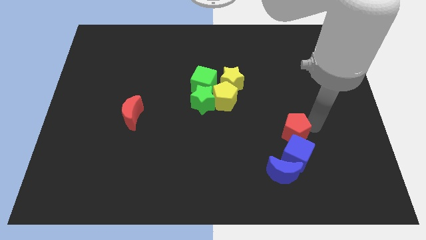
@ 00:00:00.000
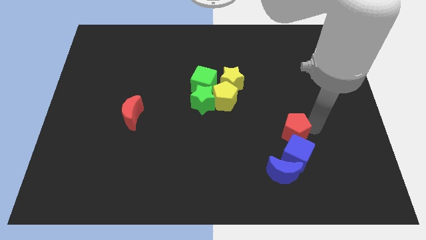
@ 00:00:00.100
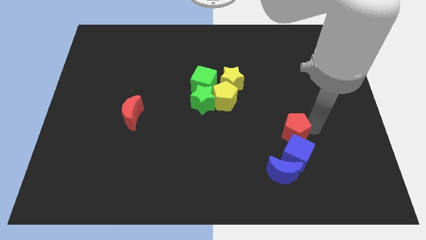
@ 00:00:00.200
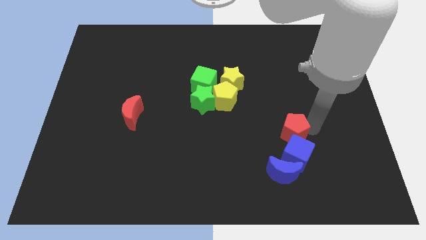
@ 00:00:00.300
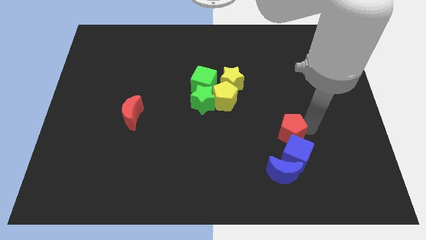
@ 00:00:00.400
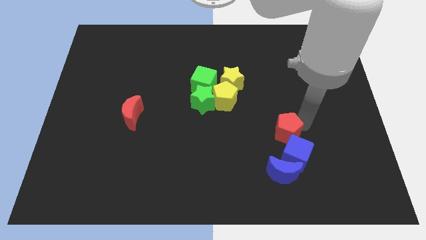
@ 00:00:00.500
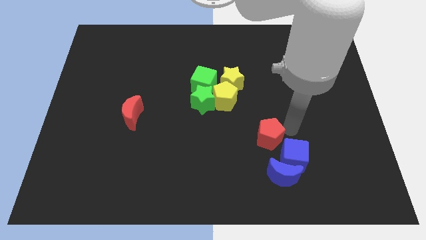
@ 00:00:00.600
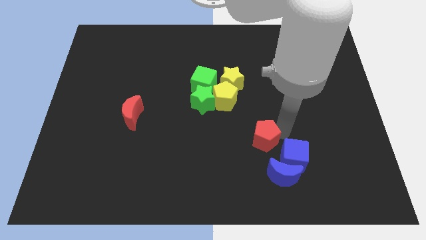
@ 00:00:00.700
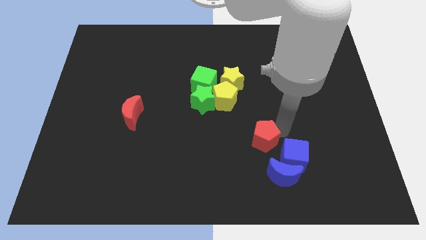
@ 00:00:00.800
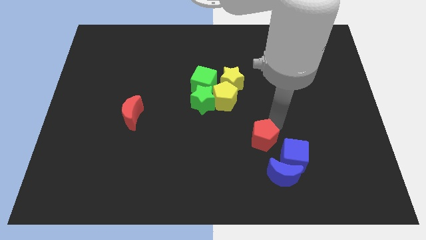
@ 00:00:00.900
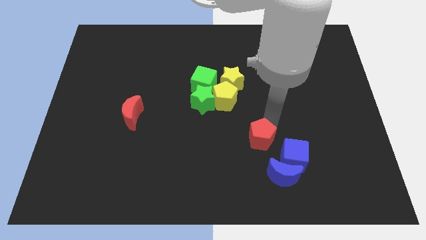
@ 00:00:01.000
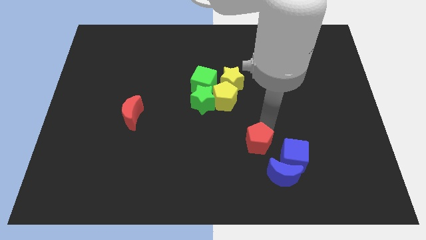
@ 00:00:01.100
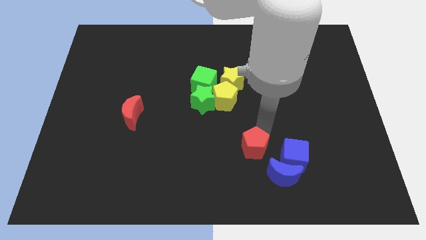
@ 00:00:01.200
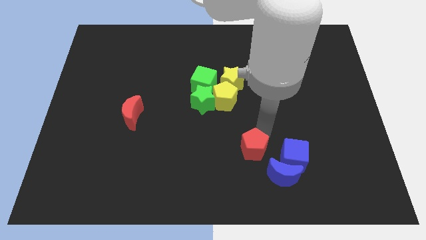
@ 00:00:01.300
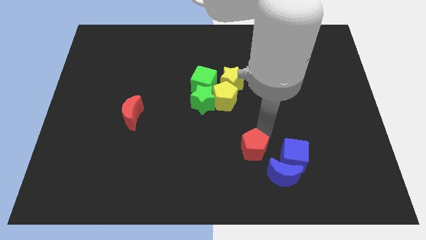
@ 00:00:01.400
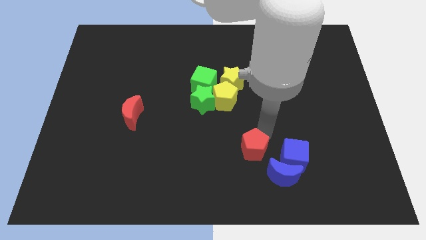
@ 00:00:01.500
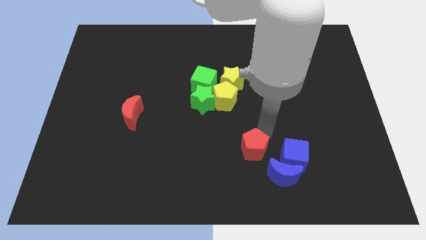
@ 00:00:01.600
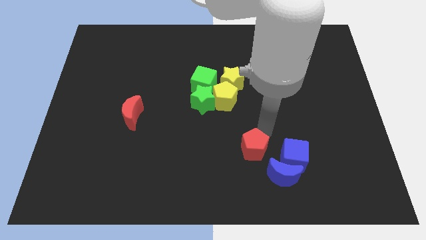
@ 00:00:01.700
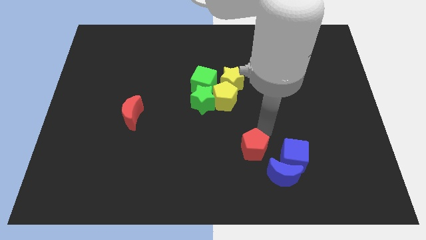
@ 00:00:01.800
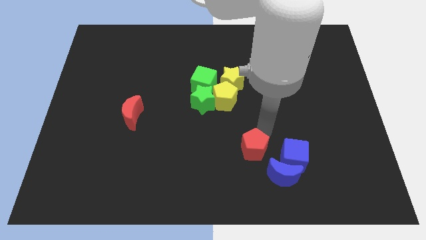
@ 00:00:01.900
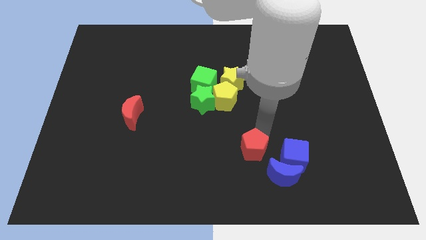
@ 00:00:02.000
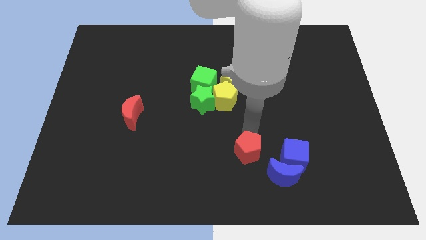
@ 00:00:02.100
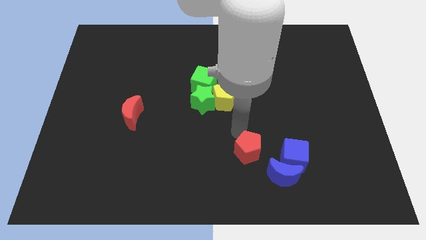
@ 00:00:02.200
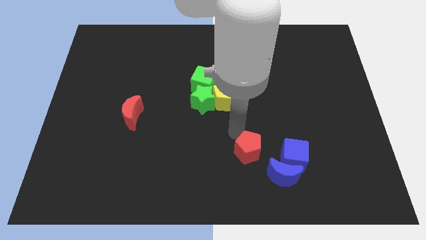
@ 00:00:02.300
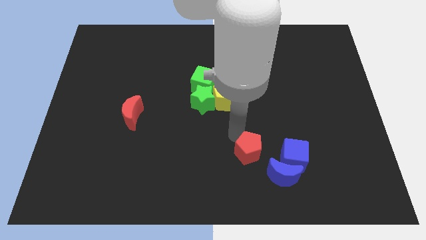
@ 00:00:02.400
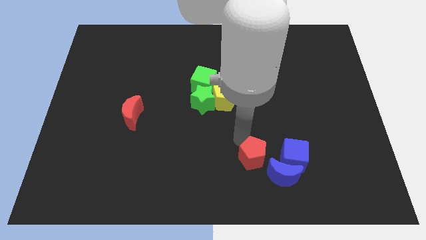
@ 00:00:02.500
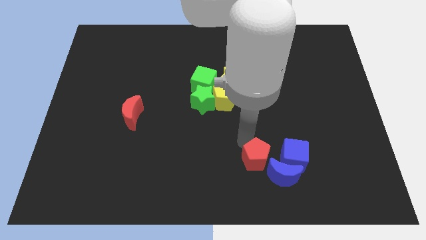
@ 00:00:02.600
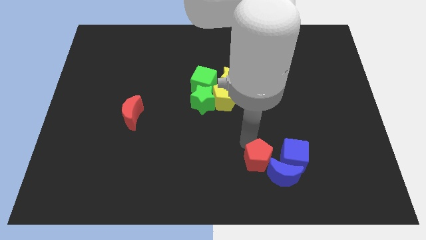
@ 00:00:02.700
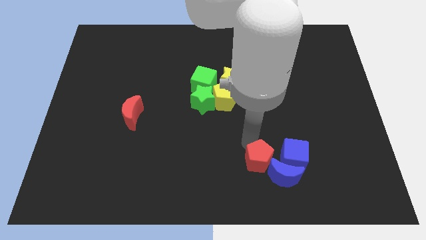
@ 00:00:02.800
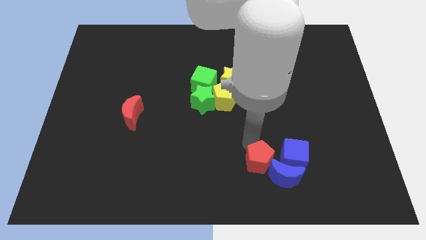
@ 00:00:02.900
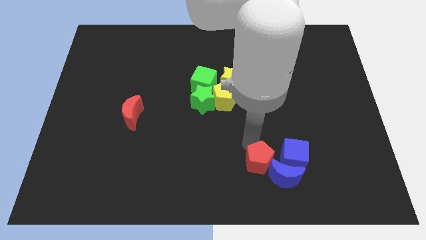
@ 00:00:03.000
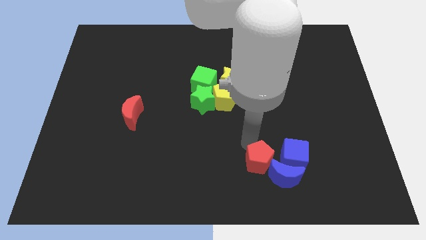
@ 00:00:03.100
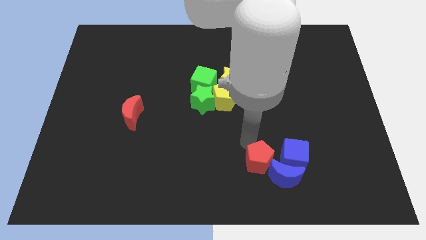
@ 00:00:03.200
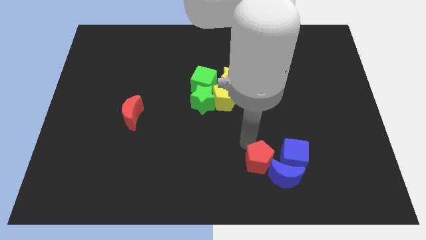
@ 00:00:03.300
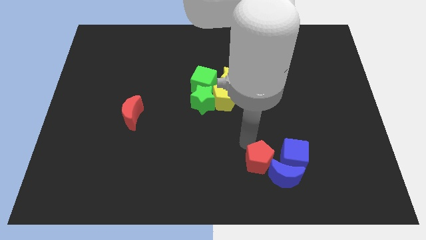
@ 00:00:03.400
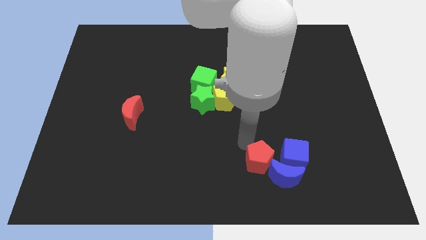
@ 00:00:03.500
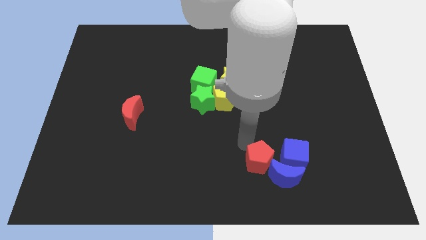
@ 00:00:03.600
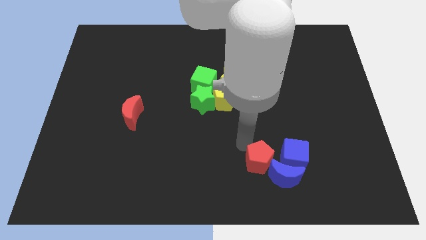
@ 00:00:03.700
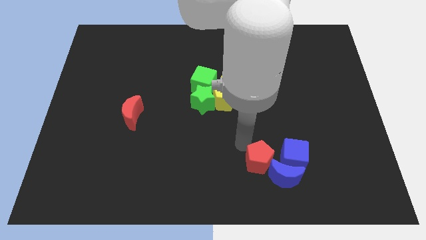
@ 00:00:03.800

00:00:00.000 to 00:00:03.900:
place the blue cube at the top of the blue crescent

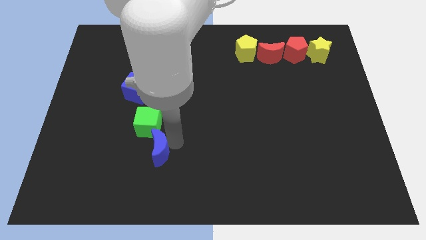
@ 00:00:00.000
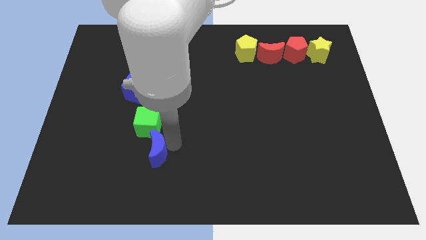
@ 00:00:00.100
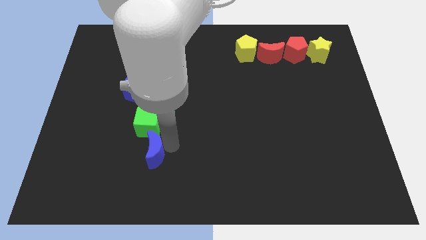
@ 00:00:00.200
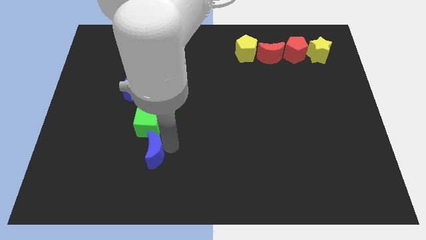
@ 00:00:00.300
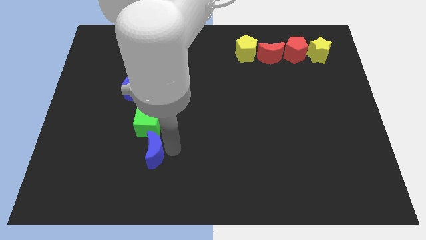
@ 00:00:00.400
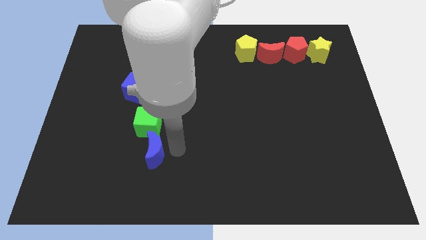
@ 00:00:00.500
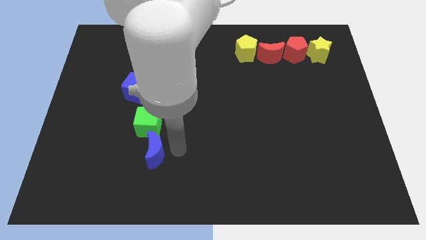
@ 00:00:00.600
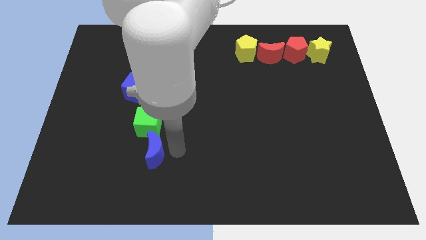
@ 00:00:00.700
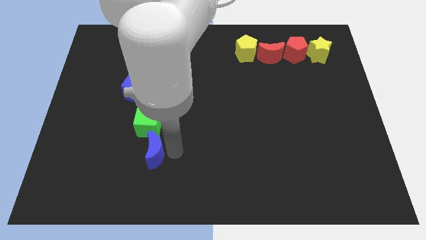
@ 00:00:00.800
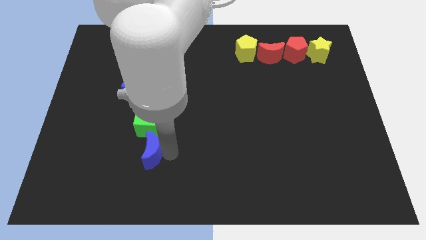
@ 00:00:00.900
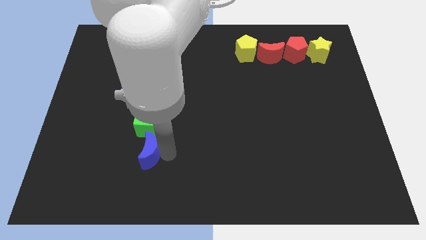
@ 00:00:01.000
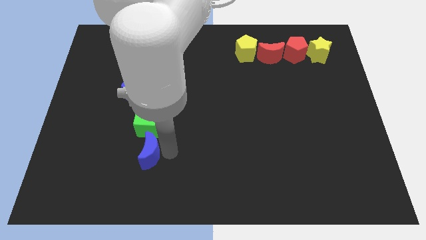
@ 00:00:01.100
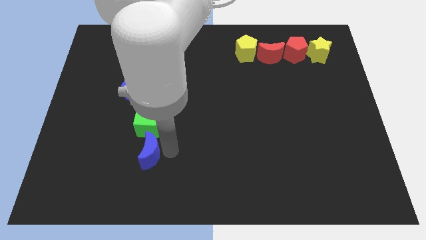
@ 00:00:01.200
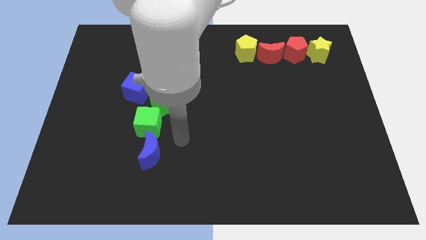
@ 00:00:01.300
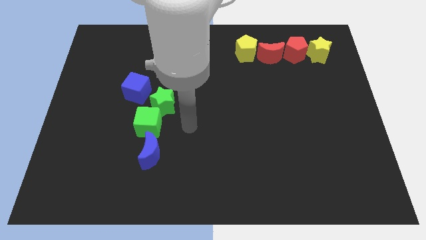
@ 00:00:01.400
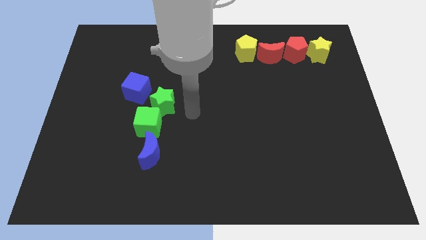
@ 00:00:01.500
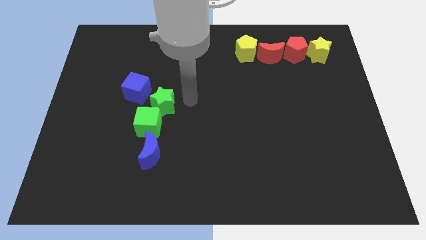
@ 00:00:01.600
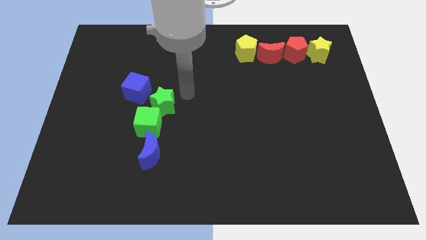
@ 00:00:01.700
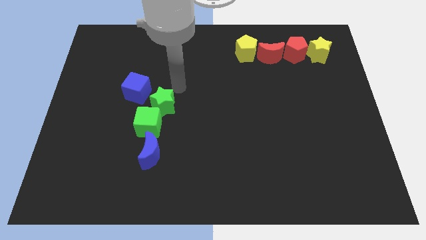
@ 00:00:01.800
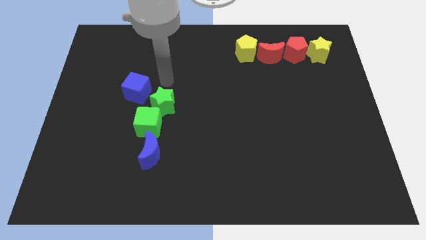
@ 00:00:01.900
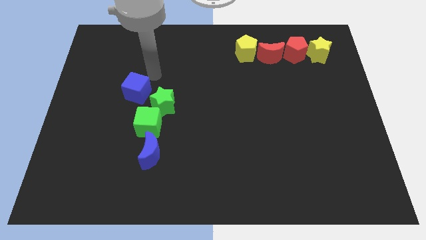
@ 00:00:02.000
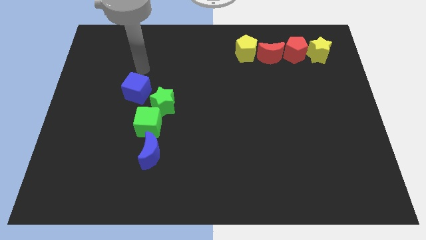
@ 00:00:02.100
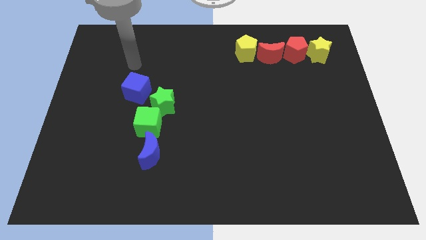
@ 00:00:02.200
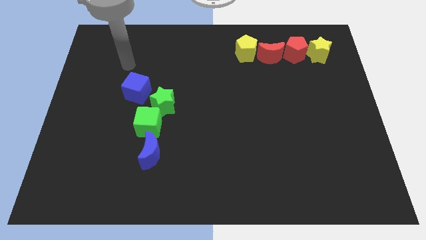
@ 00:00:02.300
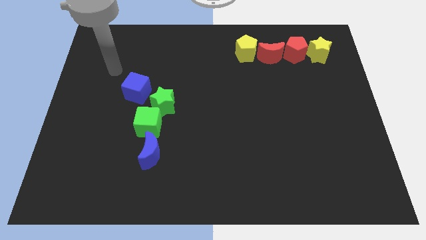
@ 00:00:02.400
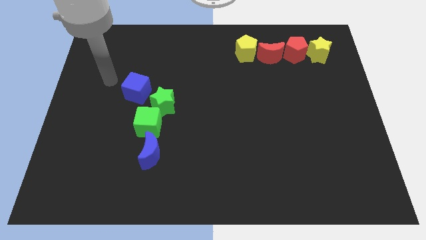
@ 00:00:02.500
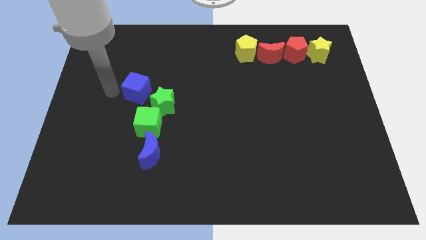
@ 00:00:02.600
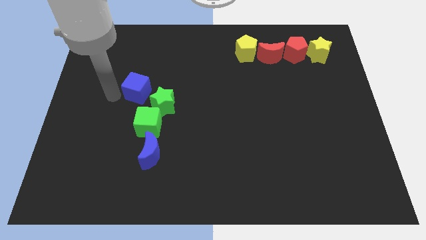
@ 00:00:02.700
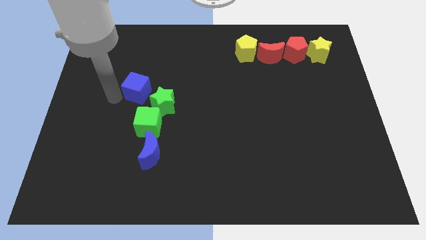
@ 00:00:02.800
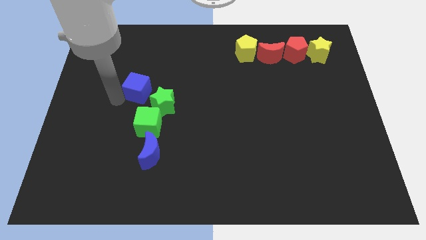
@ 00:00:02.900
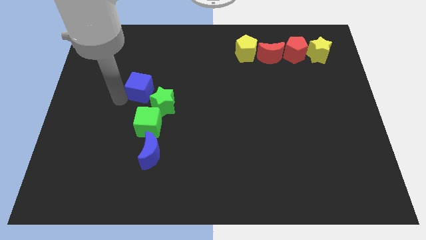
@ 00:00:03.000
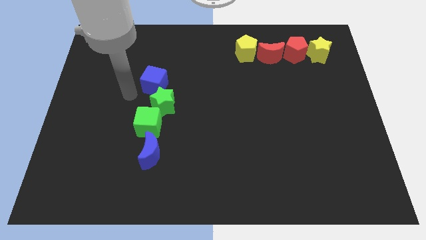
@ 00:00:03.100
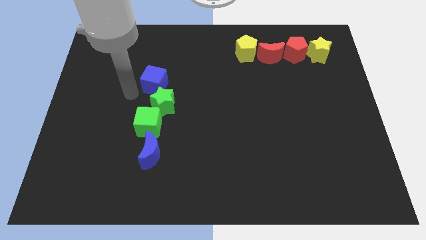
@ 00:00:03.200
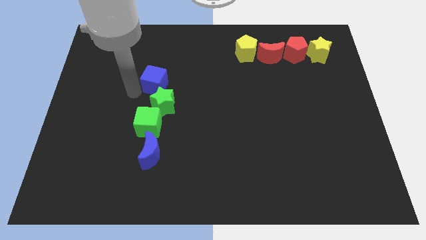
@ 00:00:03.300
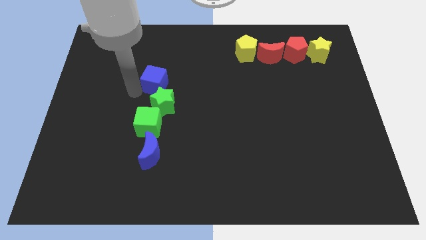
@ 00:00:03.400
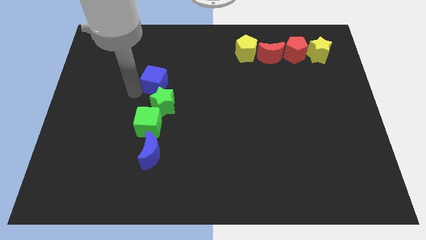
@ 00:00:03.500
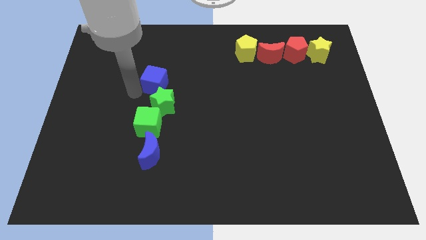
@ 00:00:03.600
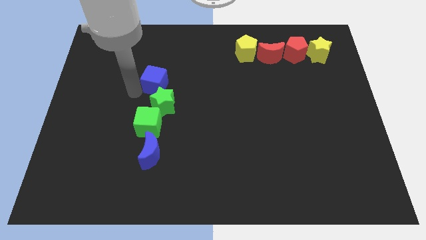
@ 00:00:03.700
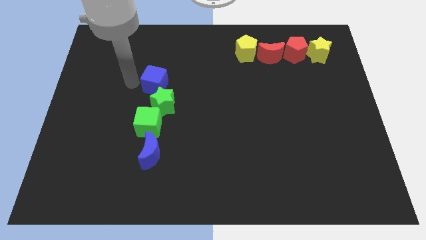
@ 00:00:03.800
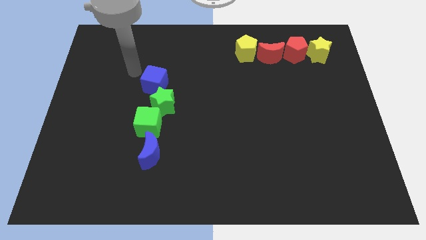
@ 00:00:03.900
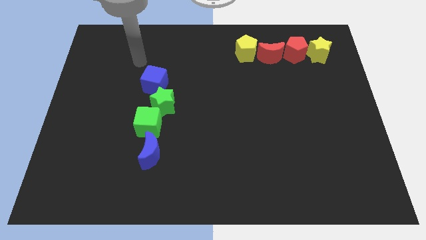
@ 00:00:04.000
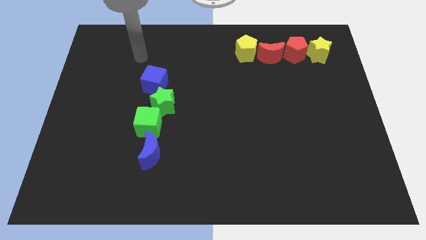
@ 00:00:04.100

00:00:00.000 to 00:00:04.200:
move blue cube above green star

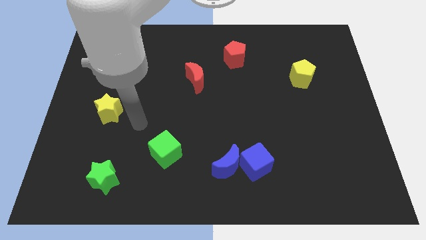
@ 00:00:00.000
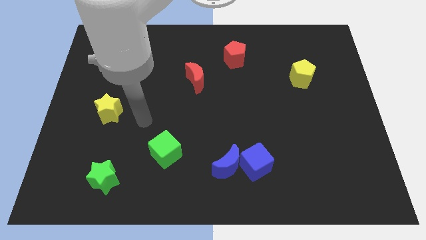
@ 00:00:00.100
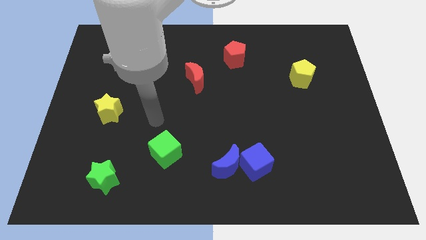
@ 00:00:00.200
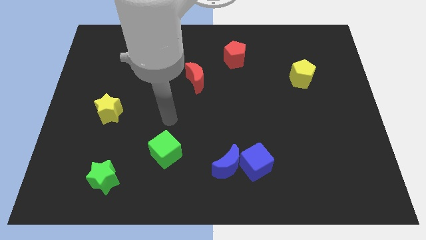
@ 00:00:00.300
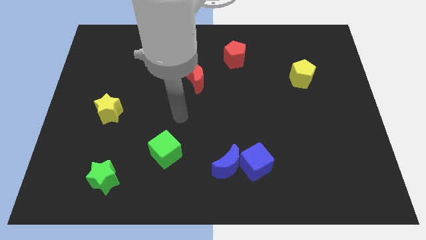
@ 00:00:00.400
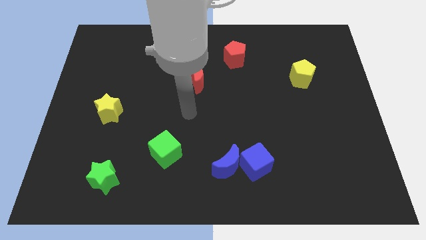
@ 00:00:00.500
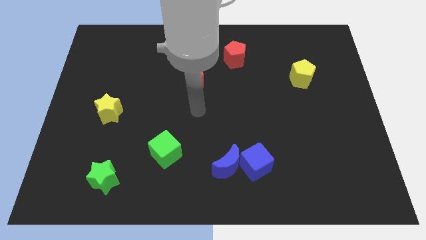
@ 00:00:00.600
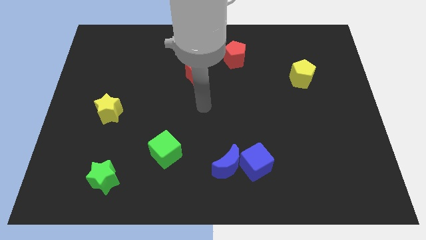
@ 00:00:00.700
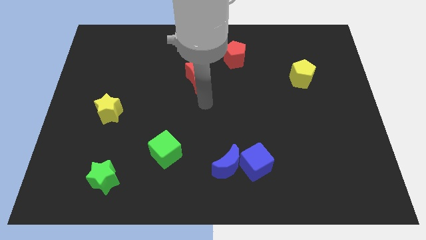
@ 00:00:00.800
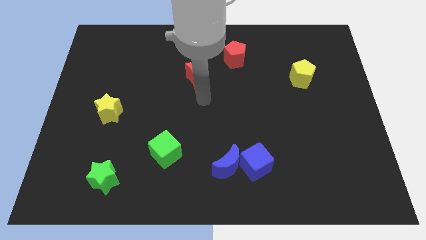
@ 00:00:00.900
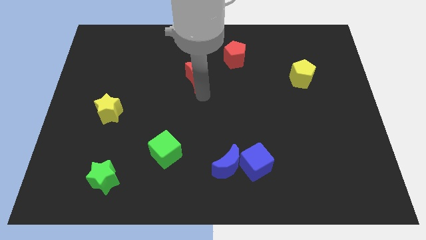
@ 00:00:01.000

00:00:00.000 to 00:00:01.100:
move arm near red crescent
